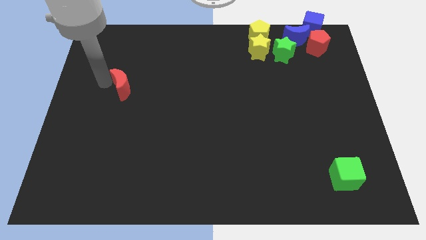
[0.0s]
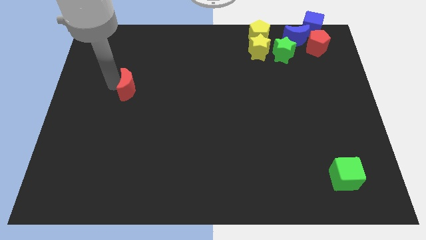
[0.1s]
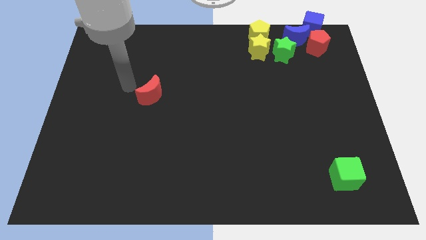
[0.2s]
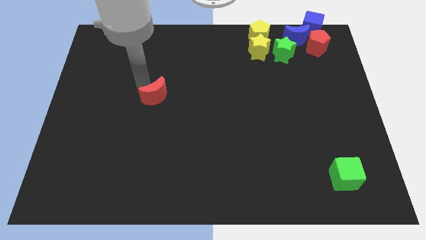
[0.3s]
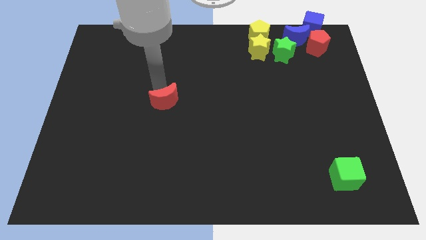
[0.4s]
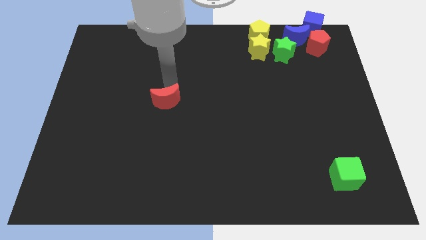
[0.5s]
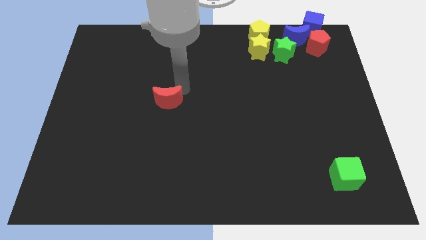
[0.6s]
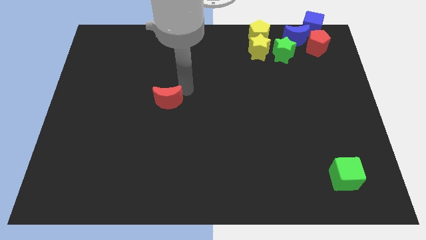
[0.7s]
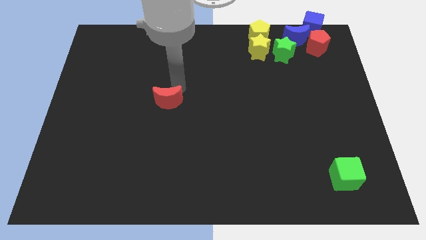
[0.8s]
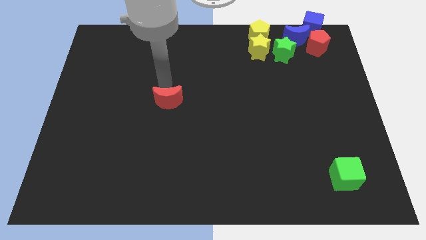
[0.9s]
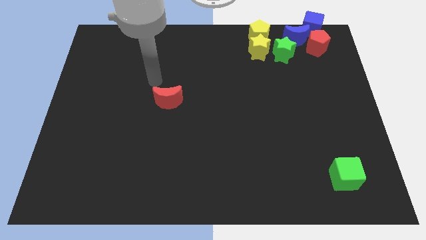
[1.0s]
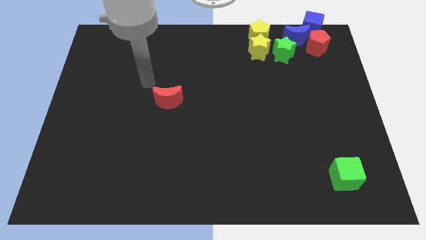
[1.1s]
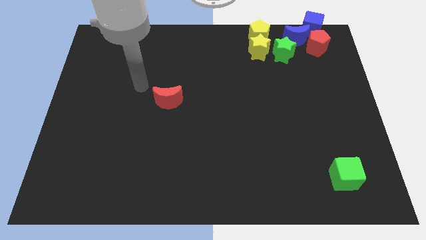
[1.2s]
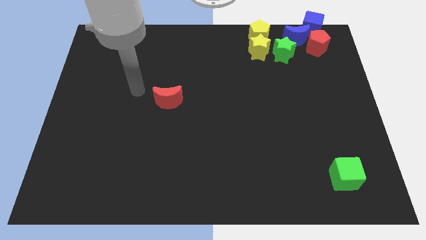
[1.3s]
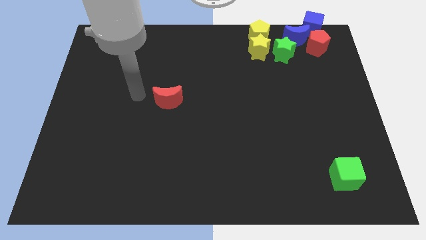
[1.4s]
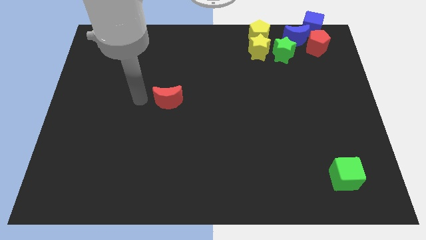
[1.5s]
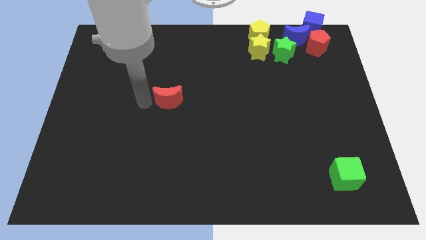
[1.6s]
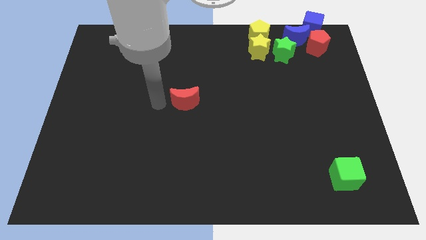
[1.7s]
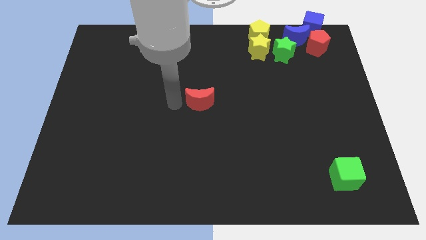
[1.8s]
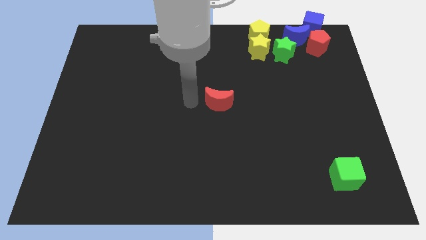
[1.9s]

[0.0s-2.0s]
push the red moon at the center of the board

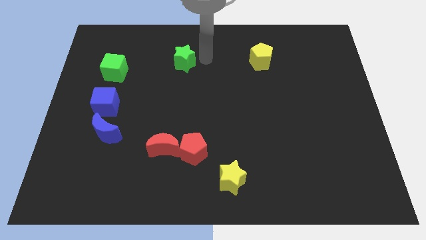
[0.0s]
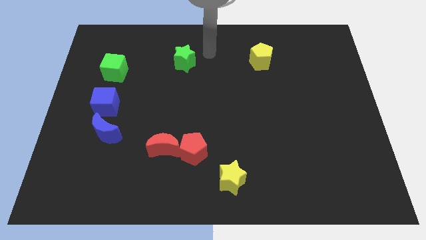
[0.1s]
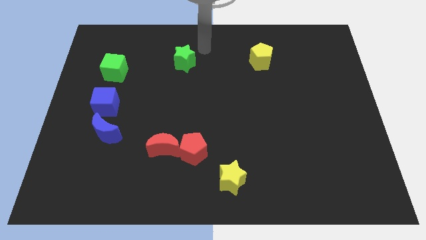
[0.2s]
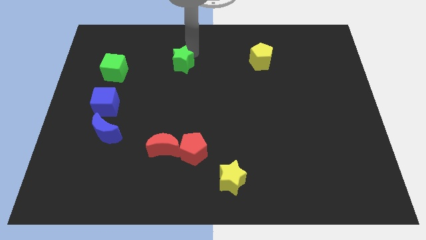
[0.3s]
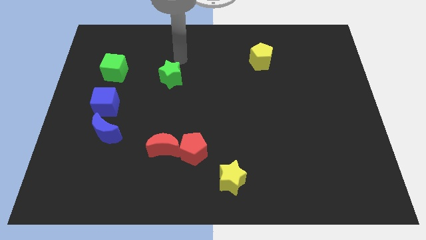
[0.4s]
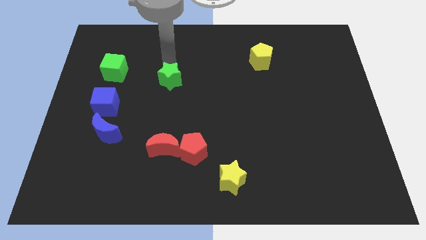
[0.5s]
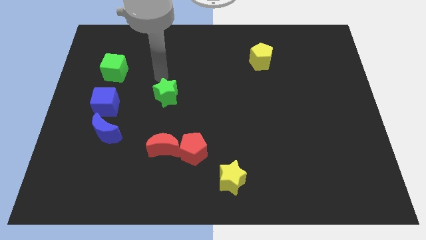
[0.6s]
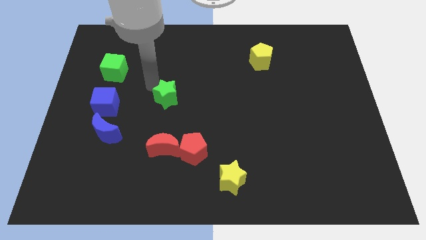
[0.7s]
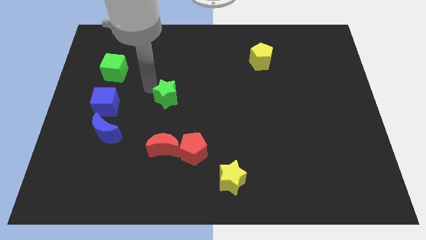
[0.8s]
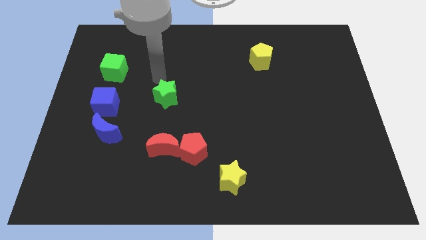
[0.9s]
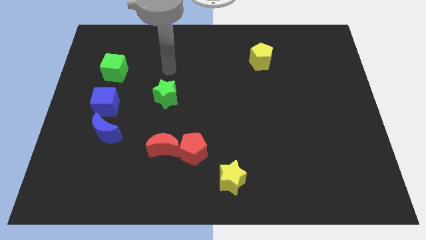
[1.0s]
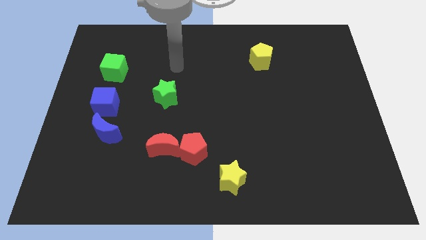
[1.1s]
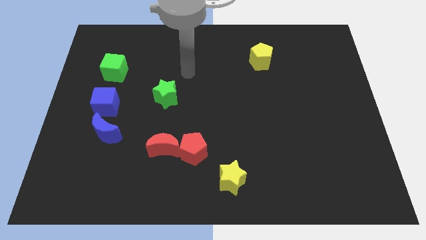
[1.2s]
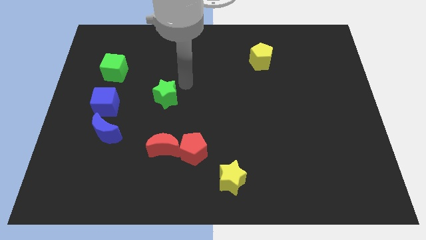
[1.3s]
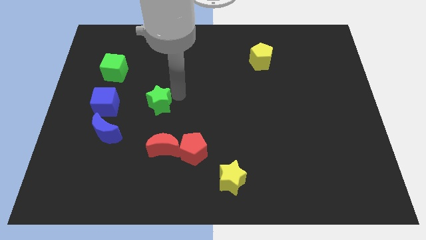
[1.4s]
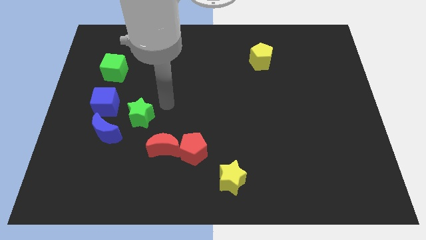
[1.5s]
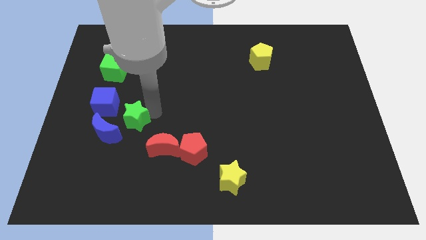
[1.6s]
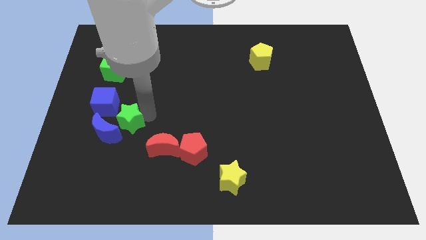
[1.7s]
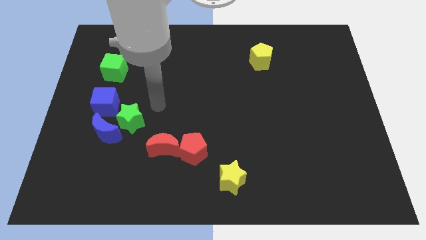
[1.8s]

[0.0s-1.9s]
move the green star towards the blue crescent

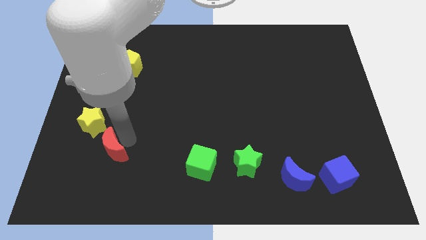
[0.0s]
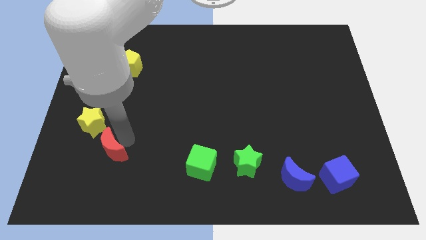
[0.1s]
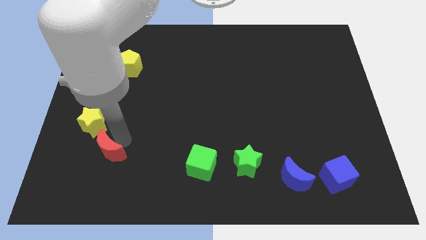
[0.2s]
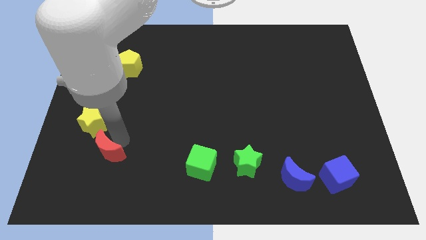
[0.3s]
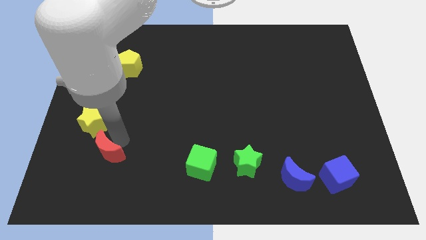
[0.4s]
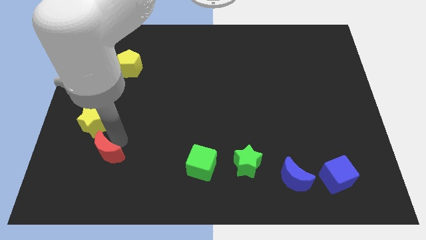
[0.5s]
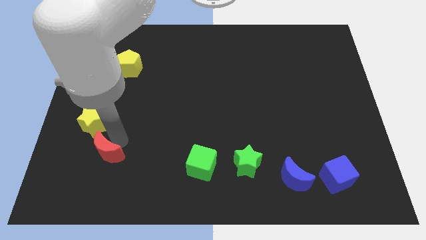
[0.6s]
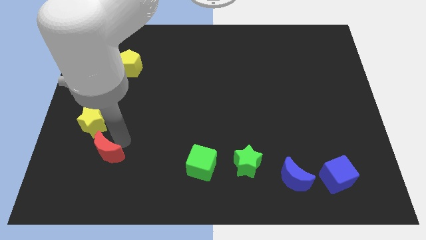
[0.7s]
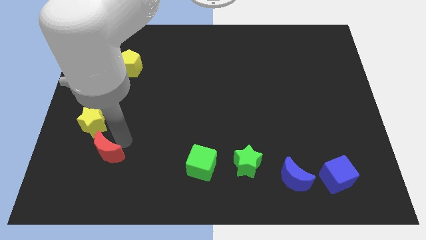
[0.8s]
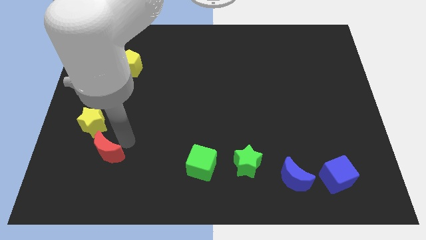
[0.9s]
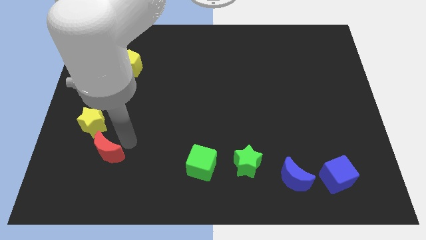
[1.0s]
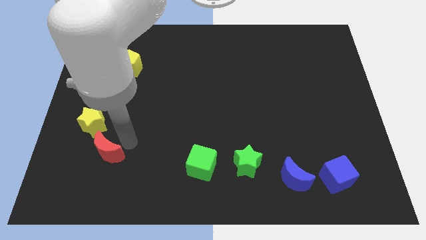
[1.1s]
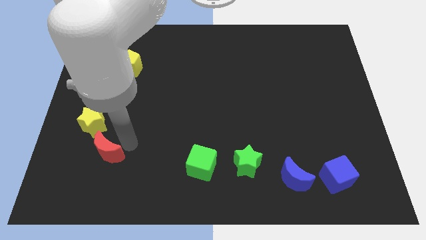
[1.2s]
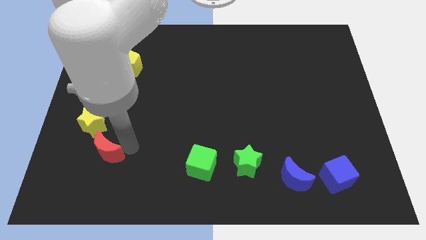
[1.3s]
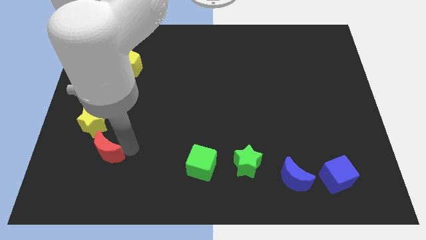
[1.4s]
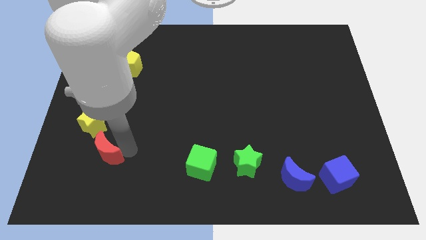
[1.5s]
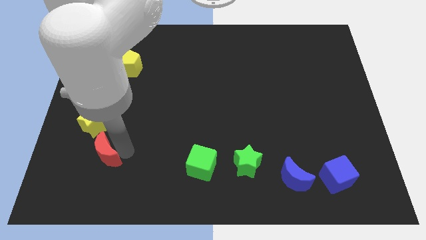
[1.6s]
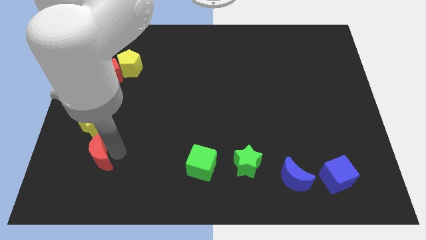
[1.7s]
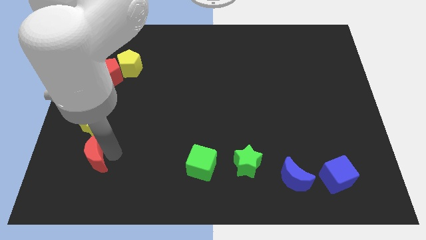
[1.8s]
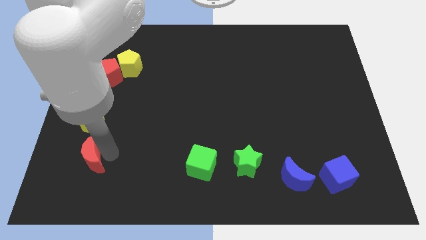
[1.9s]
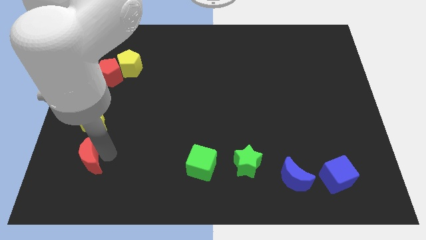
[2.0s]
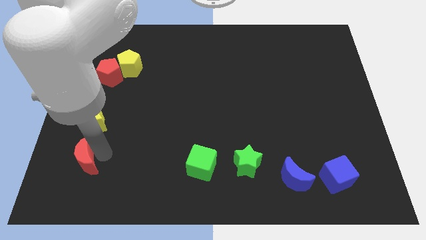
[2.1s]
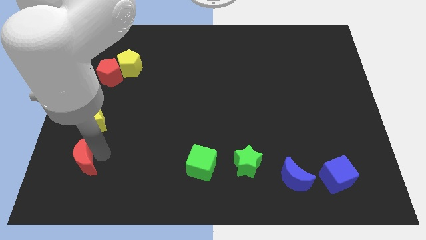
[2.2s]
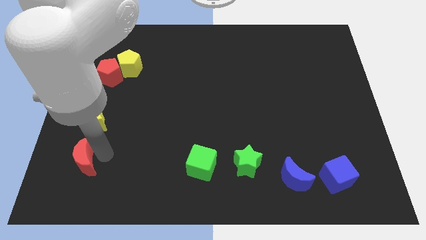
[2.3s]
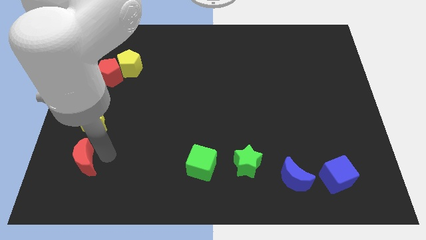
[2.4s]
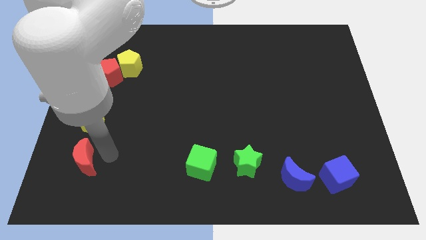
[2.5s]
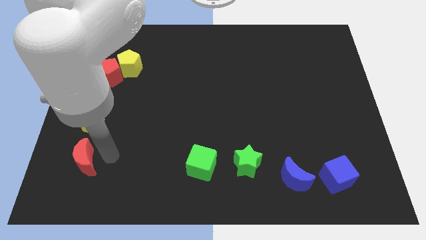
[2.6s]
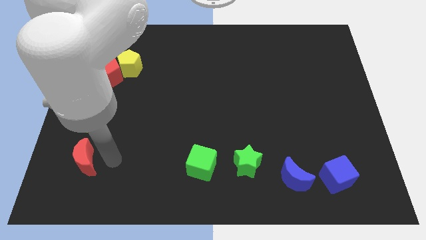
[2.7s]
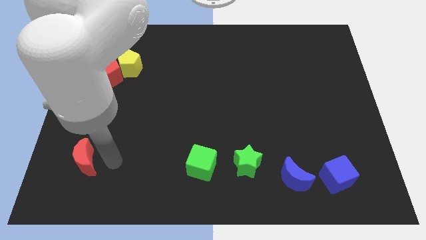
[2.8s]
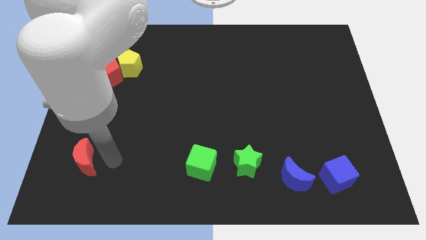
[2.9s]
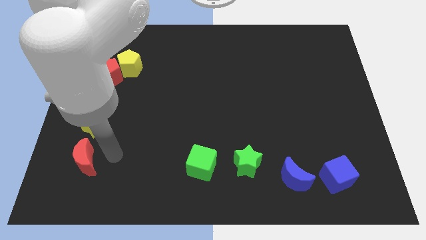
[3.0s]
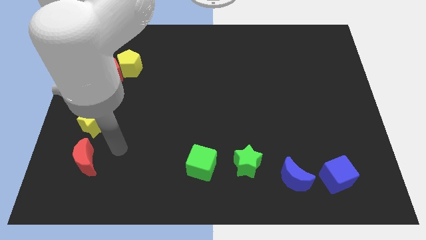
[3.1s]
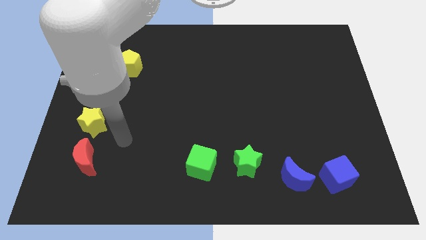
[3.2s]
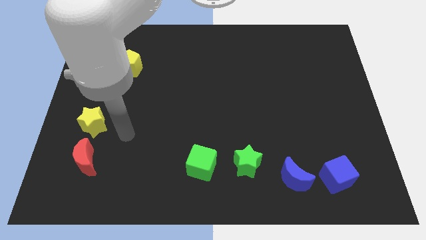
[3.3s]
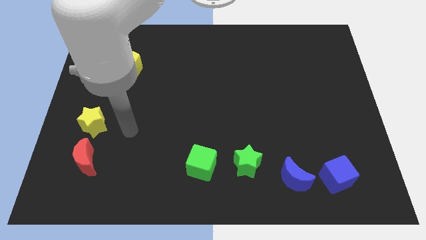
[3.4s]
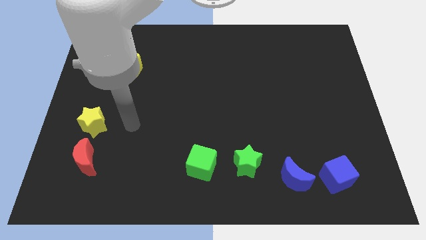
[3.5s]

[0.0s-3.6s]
put the red crescent below the yellow star

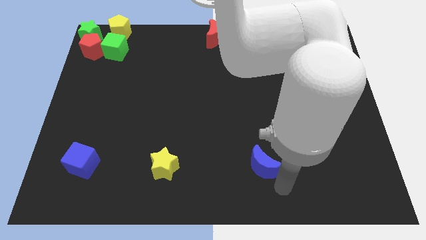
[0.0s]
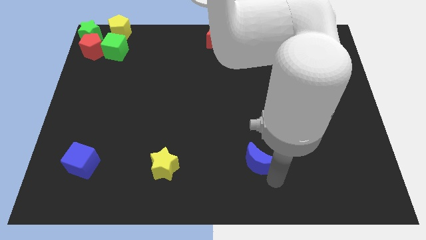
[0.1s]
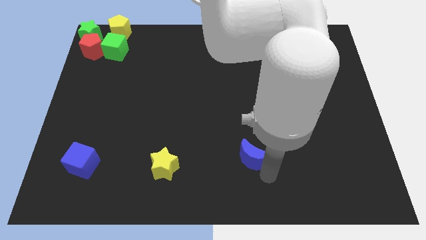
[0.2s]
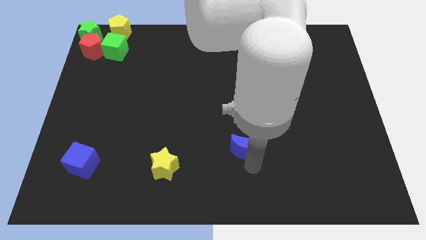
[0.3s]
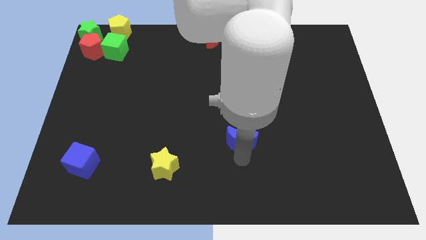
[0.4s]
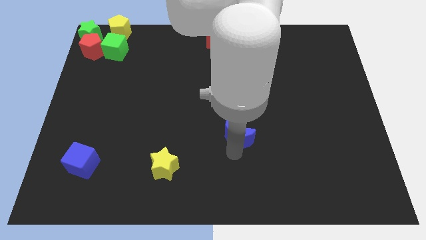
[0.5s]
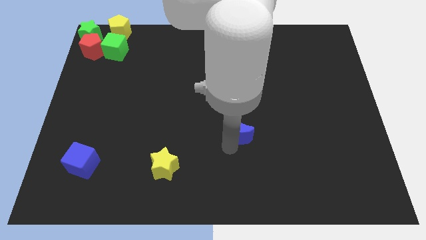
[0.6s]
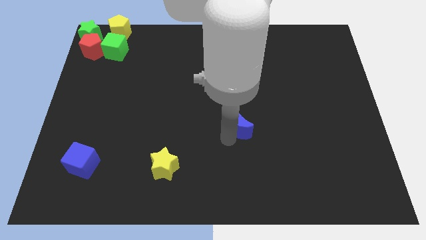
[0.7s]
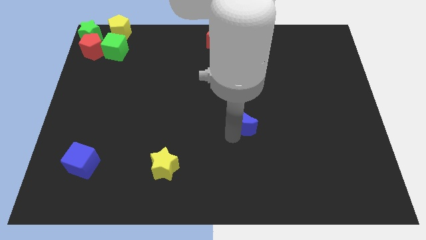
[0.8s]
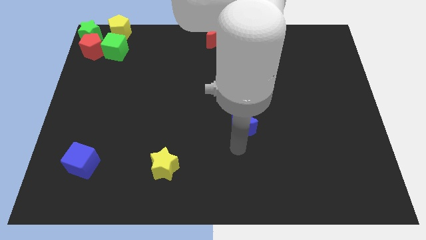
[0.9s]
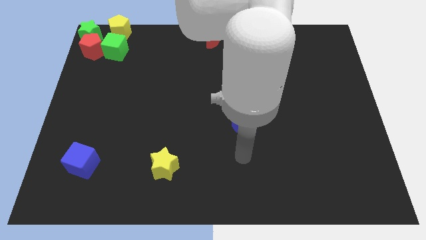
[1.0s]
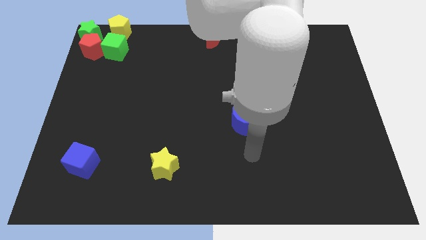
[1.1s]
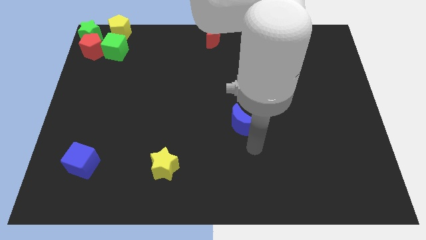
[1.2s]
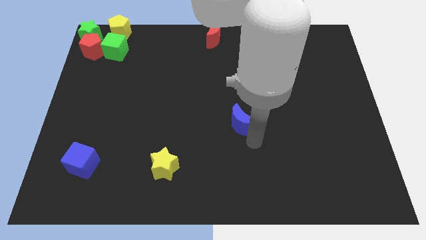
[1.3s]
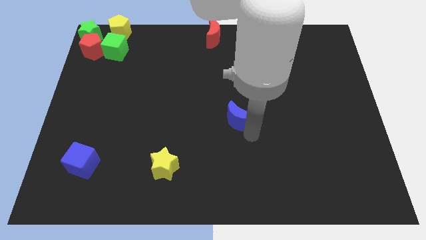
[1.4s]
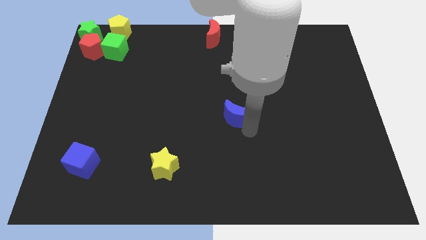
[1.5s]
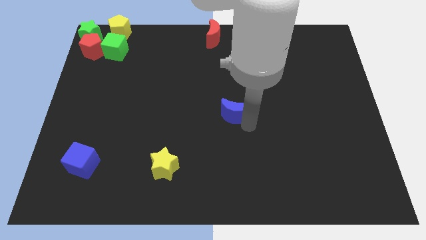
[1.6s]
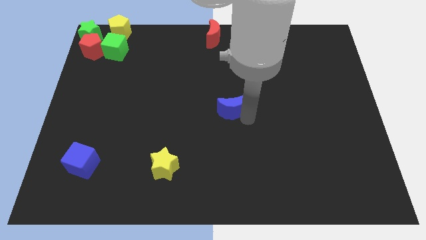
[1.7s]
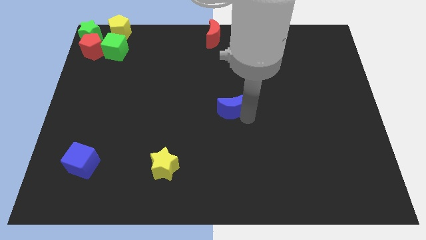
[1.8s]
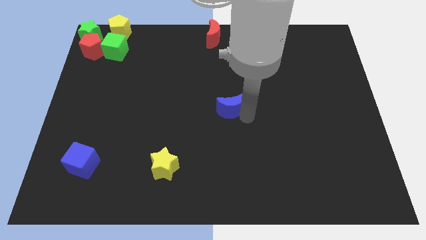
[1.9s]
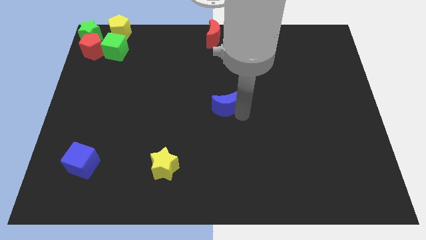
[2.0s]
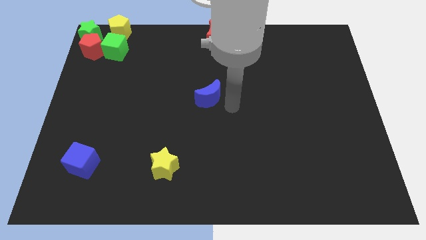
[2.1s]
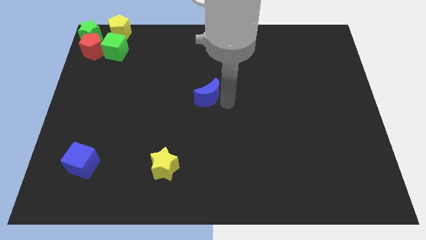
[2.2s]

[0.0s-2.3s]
drag the blue moon to the center
